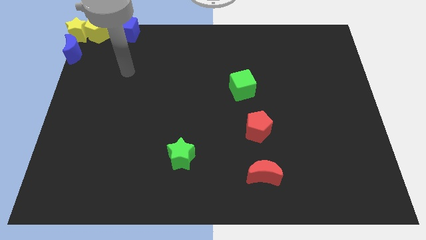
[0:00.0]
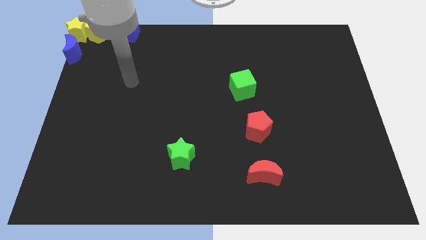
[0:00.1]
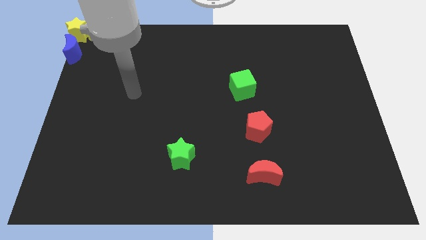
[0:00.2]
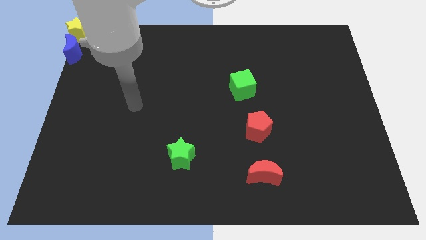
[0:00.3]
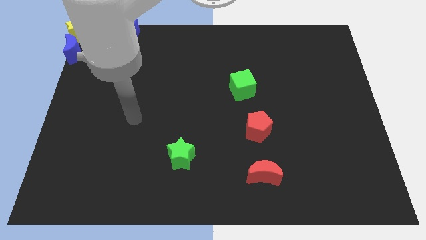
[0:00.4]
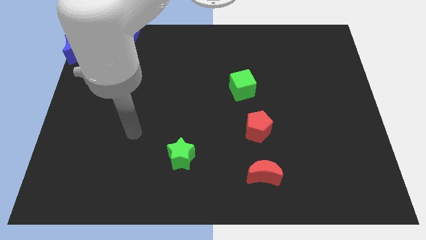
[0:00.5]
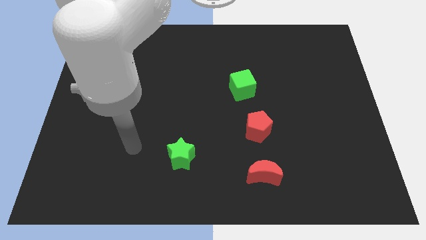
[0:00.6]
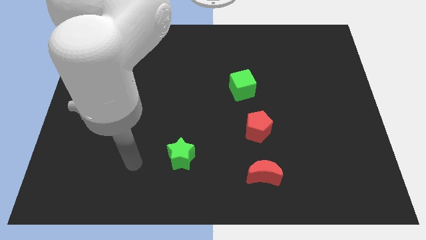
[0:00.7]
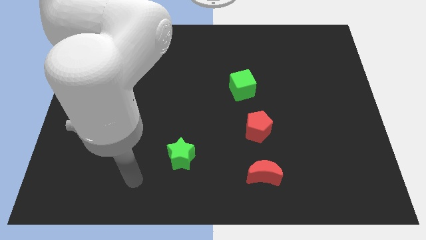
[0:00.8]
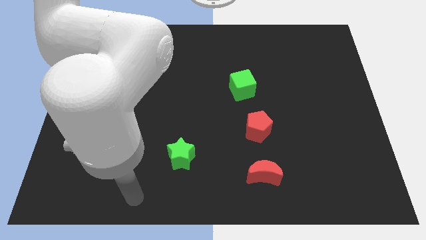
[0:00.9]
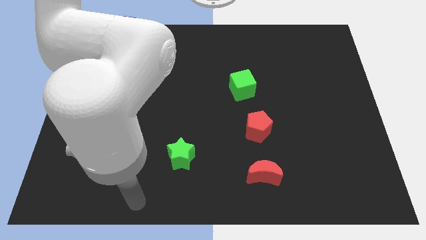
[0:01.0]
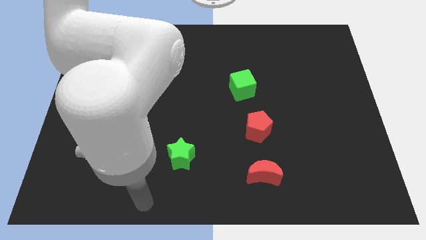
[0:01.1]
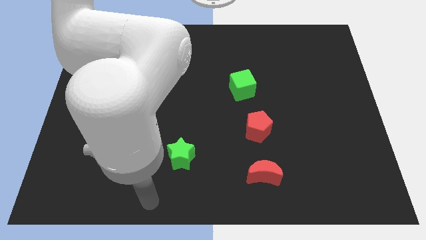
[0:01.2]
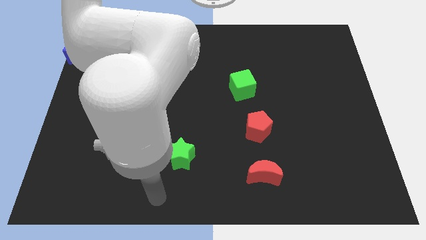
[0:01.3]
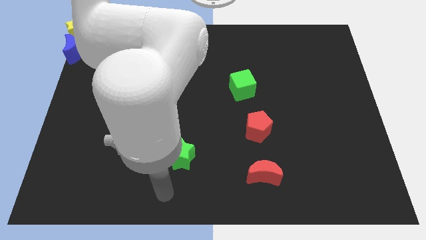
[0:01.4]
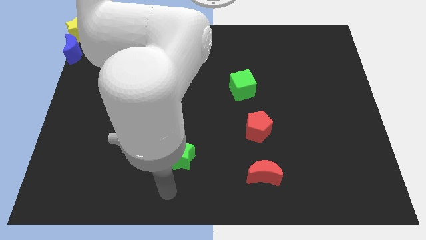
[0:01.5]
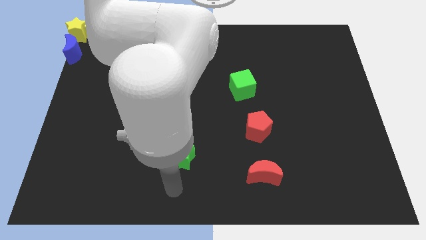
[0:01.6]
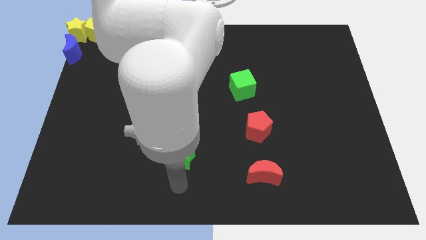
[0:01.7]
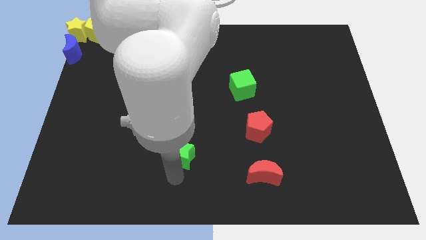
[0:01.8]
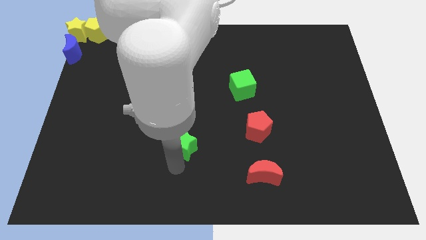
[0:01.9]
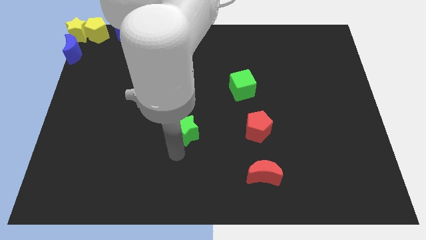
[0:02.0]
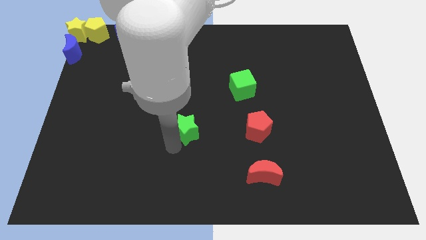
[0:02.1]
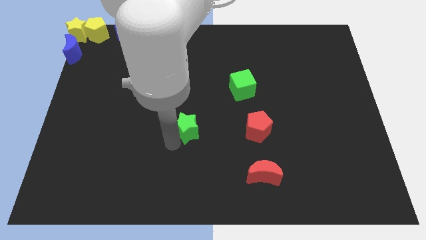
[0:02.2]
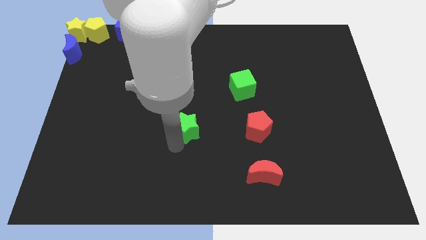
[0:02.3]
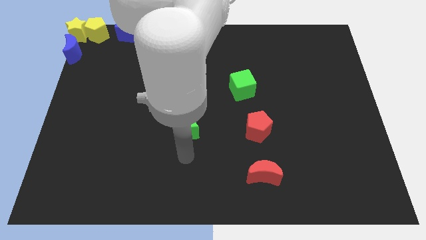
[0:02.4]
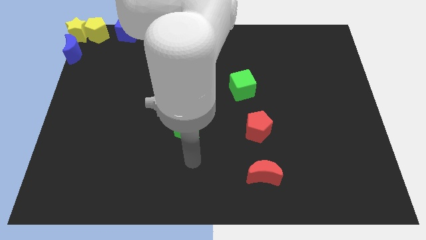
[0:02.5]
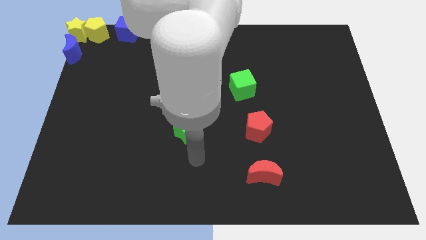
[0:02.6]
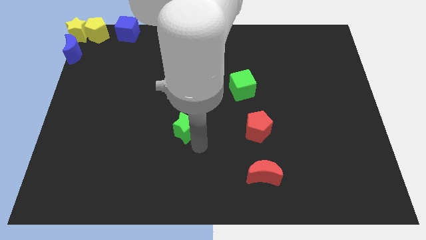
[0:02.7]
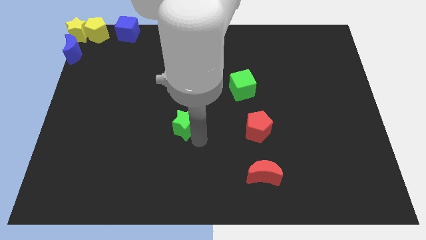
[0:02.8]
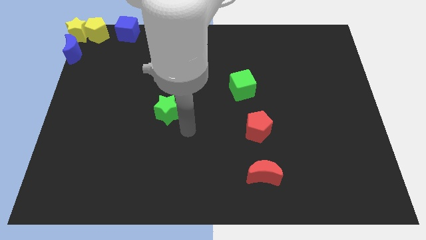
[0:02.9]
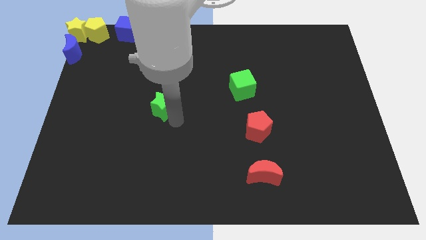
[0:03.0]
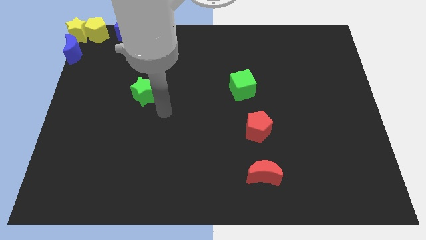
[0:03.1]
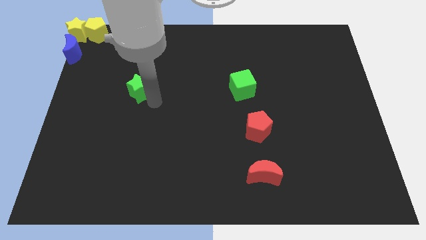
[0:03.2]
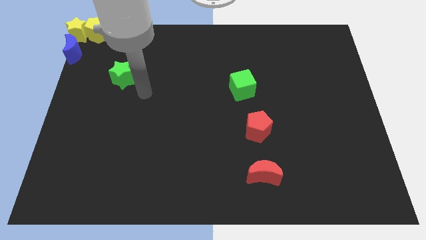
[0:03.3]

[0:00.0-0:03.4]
slide the green star horizontally to the left side of the green cube

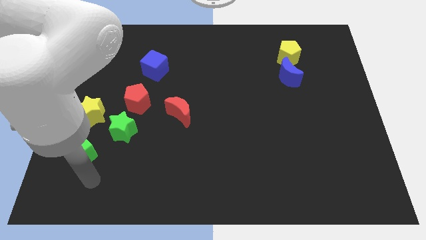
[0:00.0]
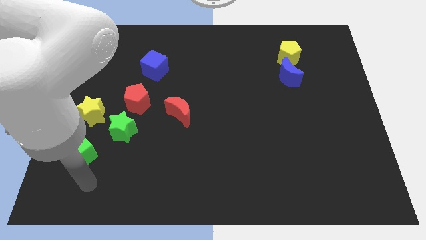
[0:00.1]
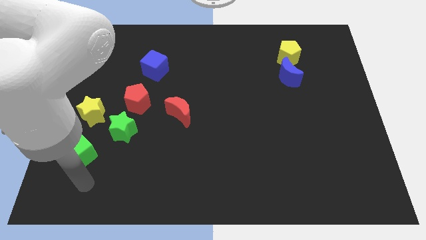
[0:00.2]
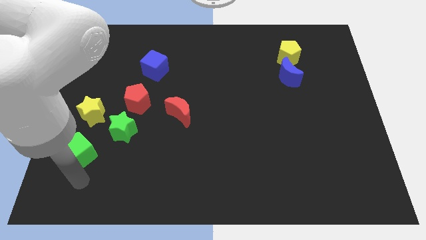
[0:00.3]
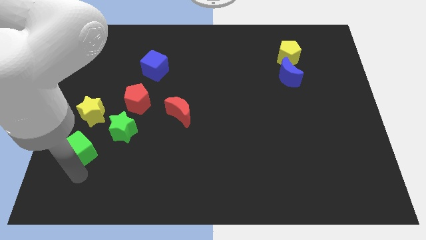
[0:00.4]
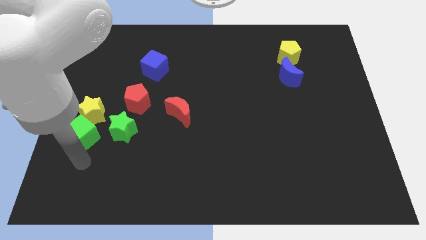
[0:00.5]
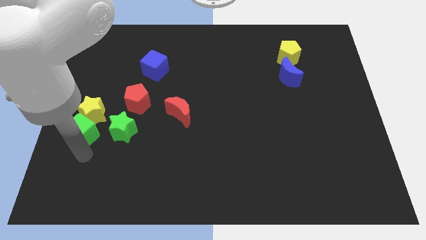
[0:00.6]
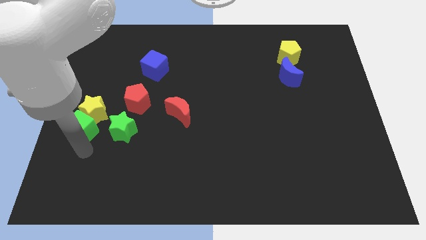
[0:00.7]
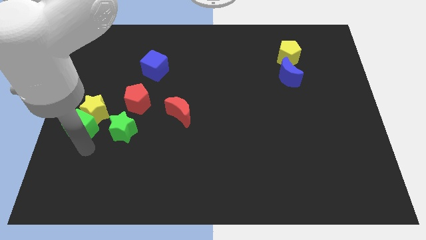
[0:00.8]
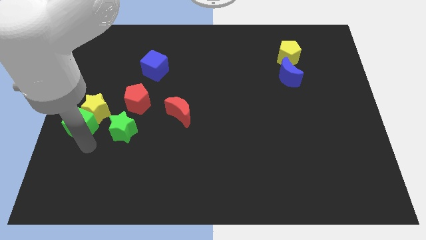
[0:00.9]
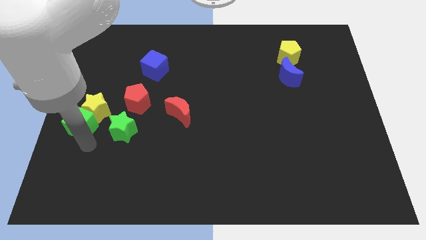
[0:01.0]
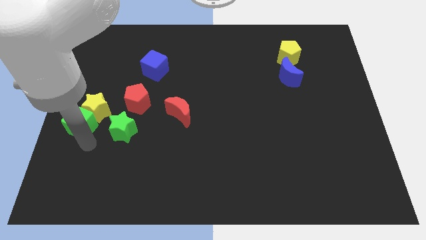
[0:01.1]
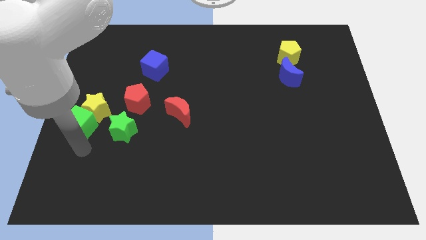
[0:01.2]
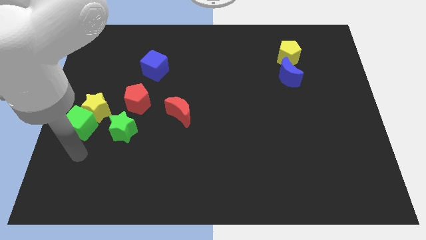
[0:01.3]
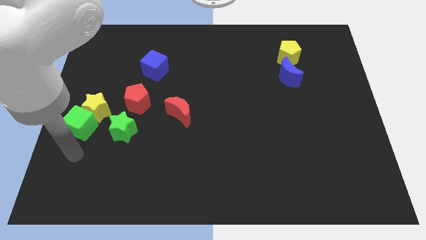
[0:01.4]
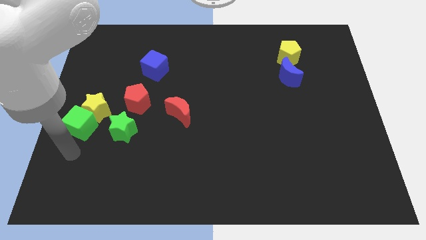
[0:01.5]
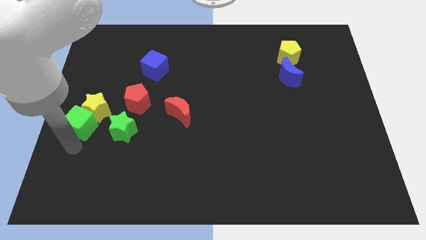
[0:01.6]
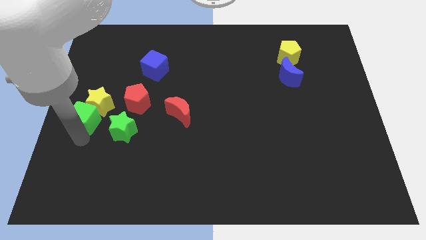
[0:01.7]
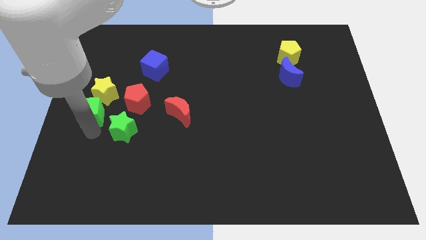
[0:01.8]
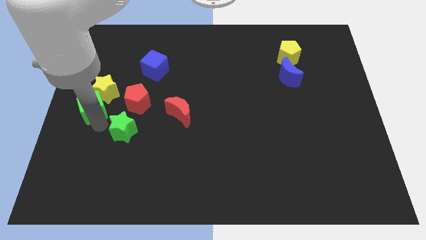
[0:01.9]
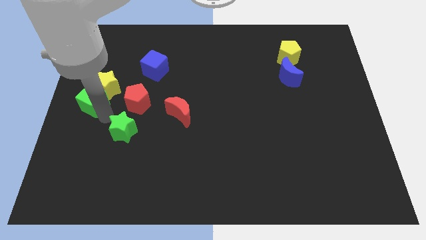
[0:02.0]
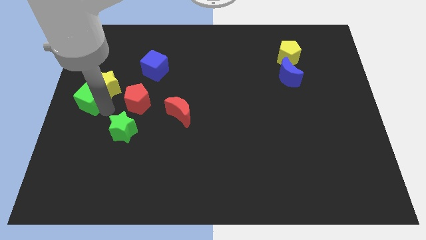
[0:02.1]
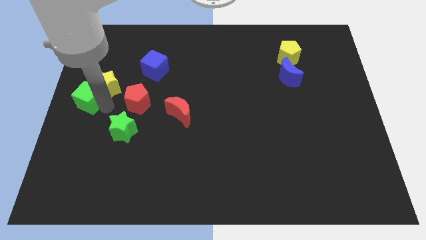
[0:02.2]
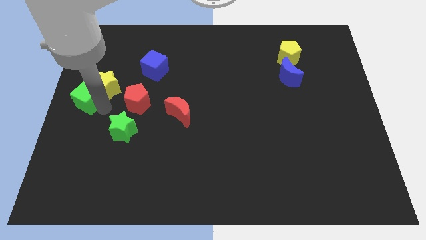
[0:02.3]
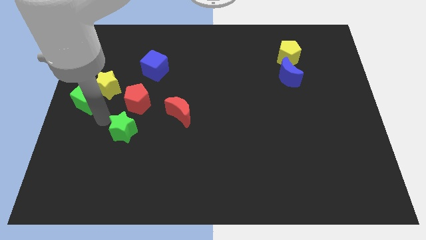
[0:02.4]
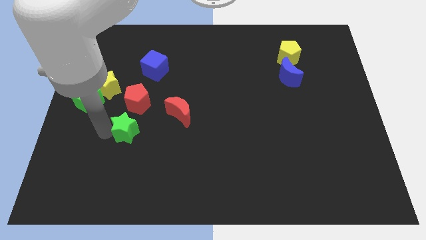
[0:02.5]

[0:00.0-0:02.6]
place the rde cube into the yellow star

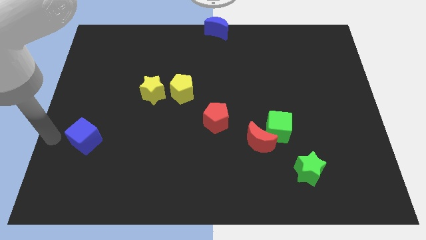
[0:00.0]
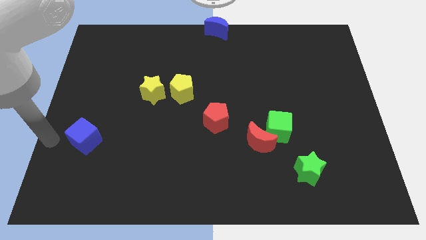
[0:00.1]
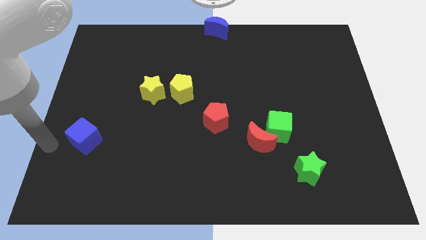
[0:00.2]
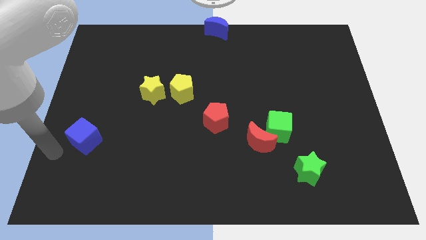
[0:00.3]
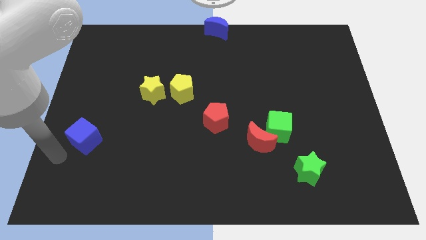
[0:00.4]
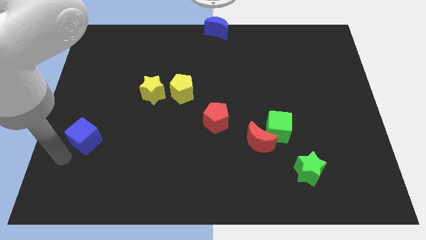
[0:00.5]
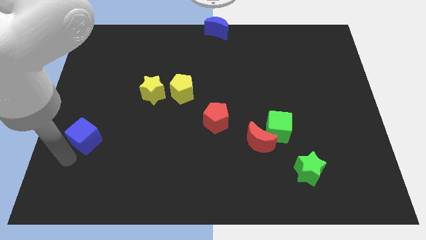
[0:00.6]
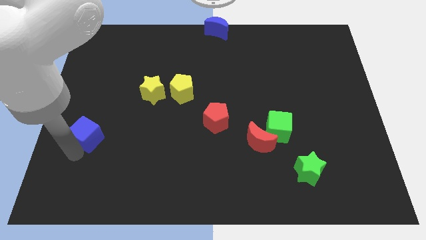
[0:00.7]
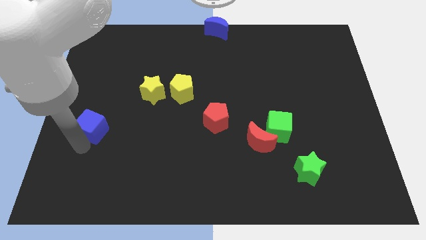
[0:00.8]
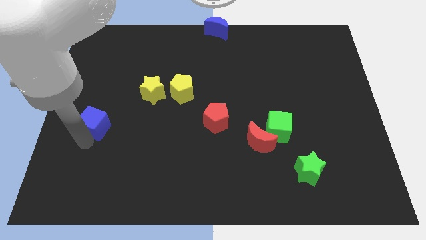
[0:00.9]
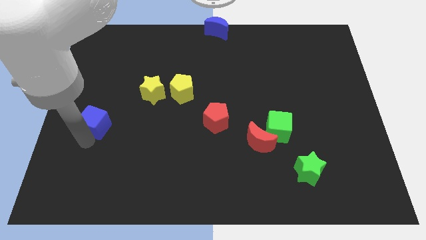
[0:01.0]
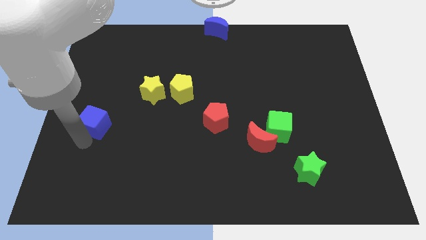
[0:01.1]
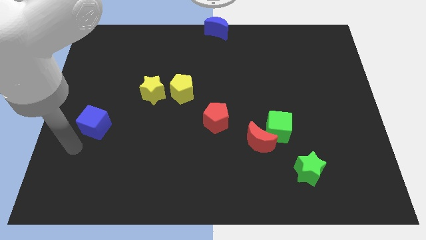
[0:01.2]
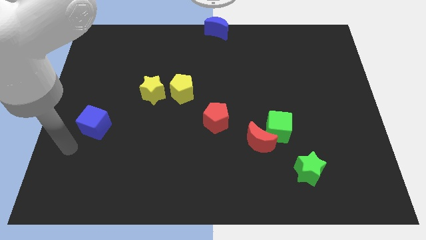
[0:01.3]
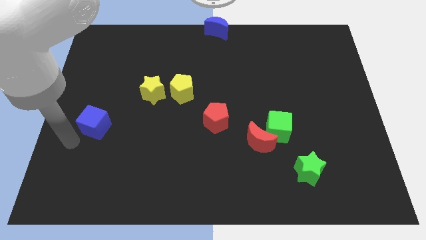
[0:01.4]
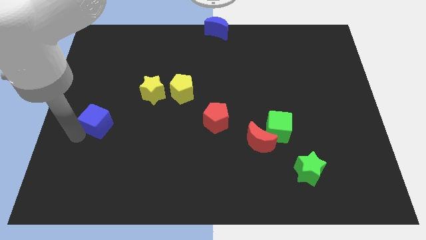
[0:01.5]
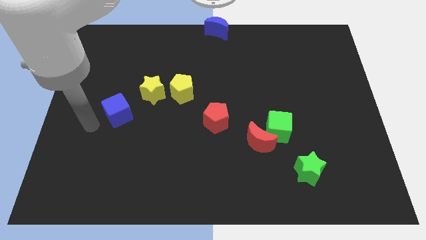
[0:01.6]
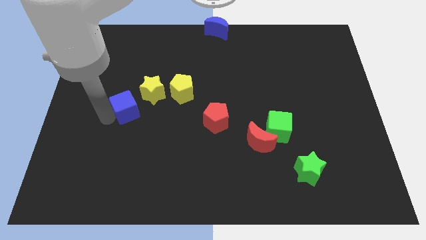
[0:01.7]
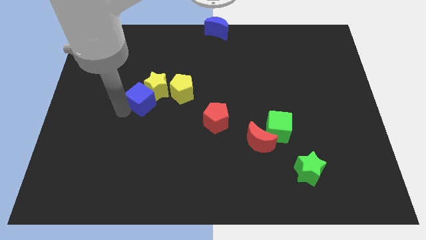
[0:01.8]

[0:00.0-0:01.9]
push the blue cube into the yellow star

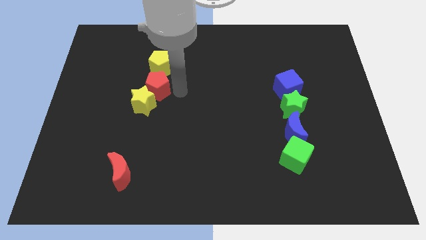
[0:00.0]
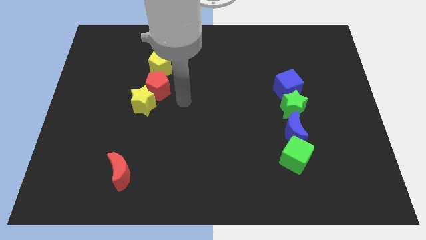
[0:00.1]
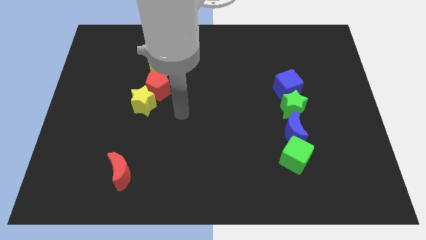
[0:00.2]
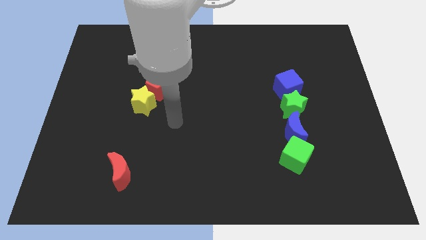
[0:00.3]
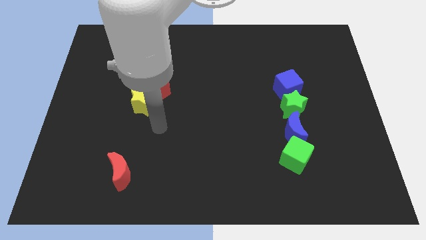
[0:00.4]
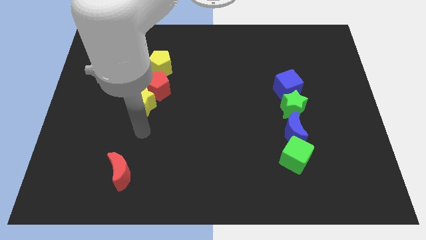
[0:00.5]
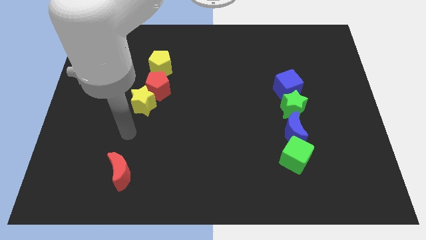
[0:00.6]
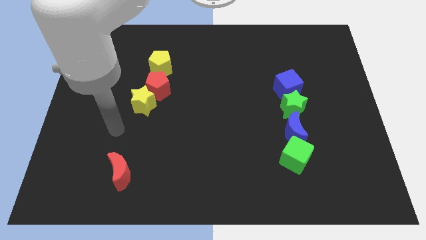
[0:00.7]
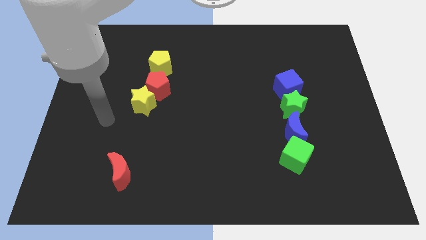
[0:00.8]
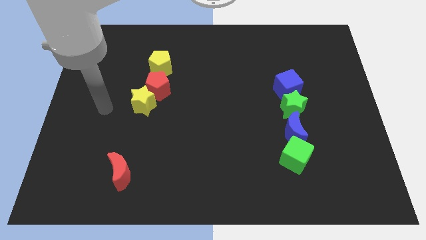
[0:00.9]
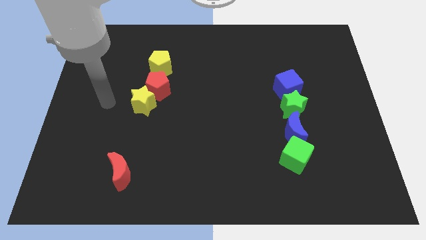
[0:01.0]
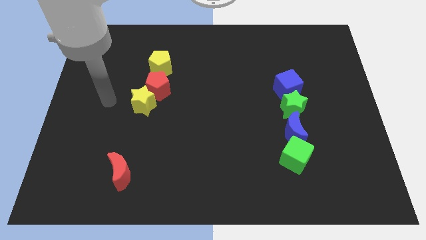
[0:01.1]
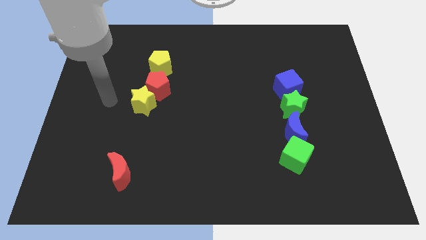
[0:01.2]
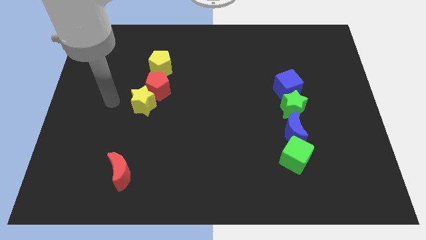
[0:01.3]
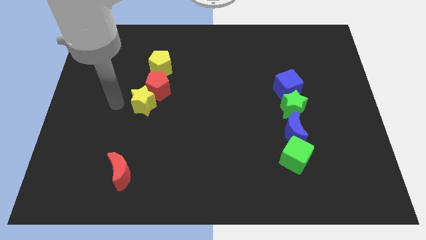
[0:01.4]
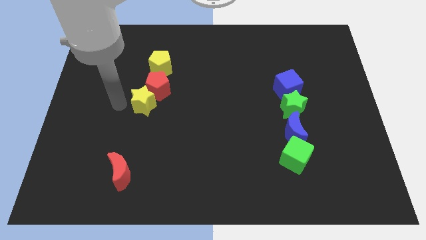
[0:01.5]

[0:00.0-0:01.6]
move arm left beside the yellow star
